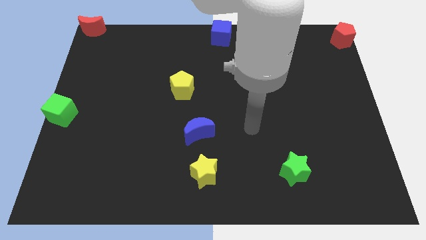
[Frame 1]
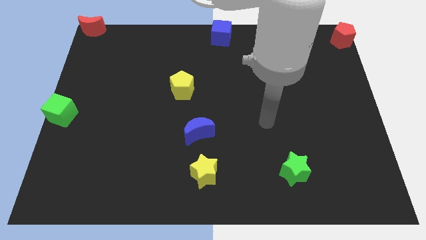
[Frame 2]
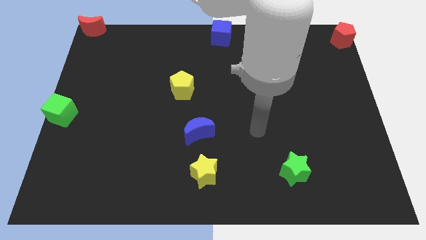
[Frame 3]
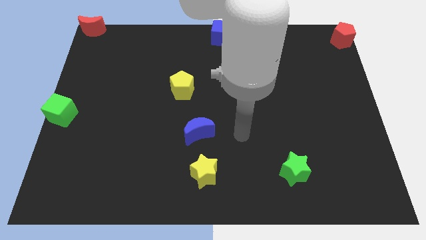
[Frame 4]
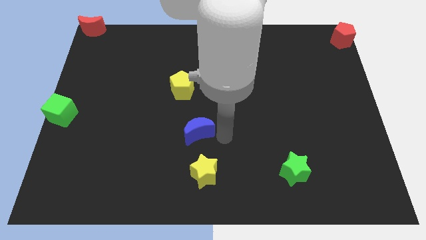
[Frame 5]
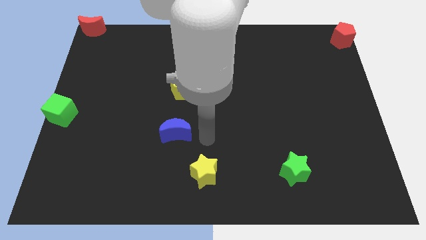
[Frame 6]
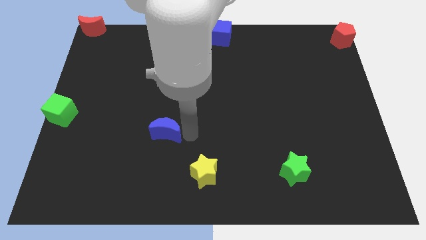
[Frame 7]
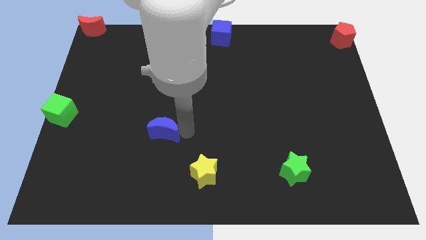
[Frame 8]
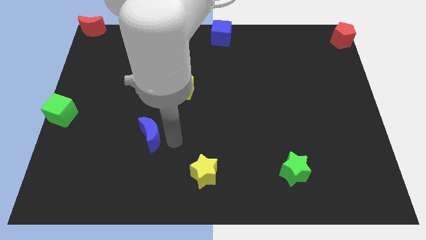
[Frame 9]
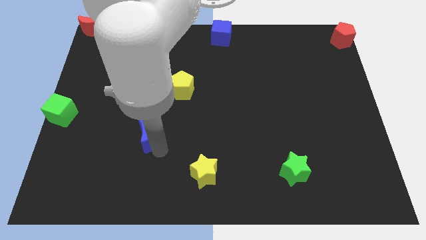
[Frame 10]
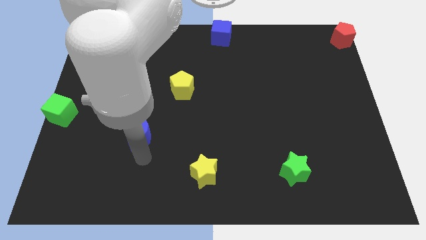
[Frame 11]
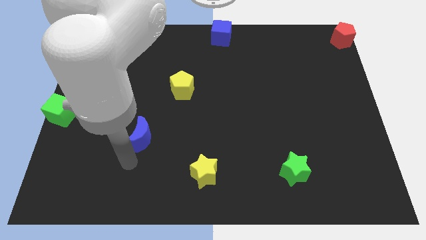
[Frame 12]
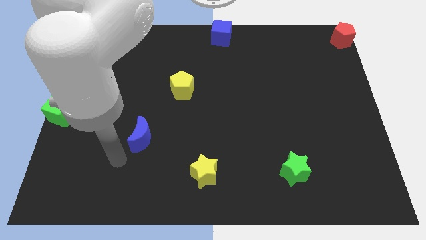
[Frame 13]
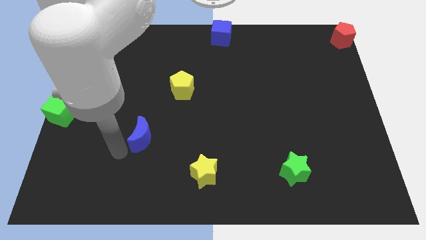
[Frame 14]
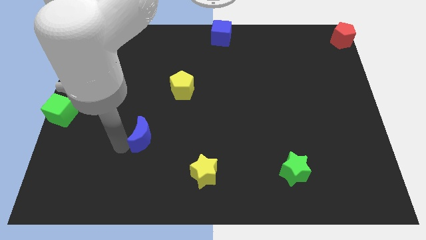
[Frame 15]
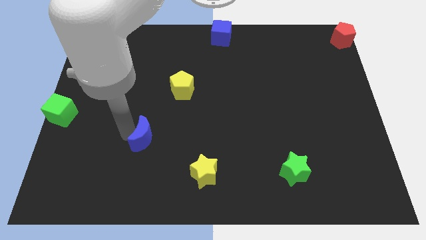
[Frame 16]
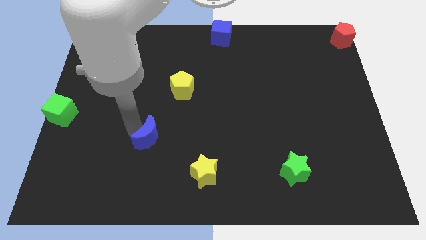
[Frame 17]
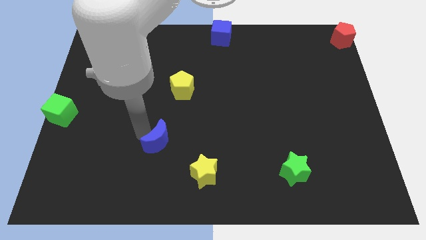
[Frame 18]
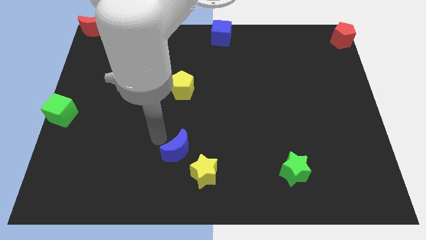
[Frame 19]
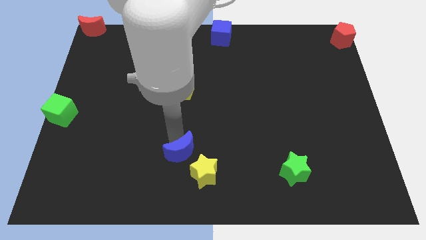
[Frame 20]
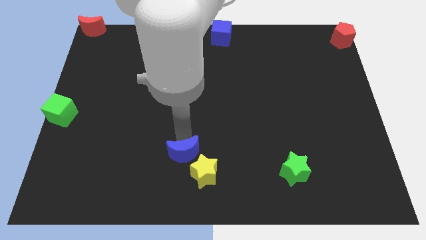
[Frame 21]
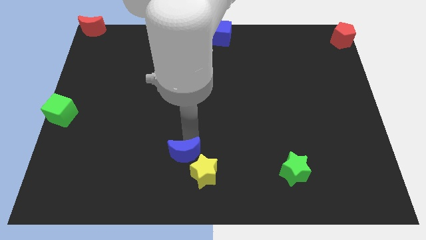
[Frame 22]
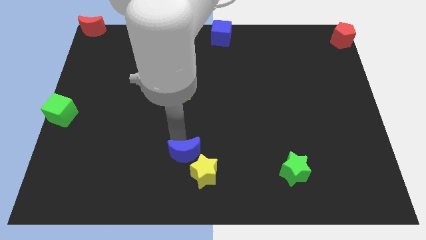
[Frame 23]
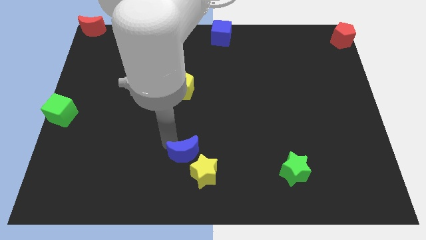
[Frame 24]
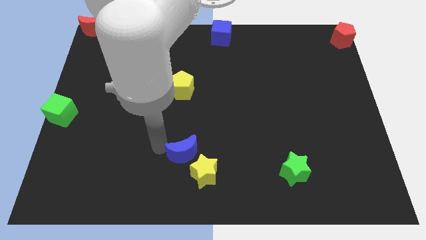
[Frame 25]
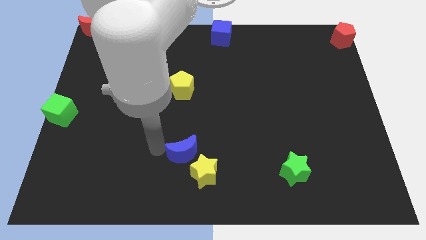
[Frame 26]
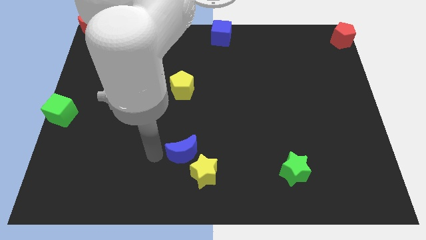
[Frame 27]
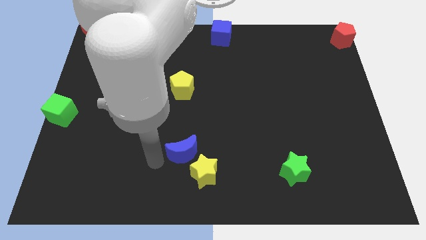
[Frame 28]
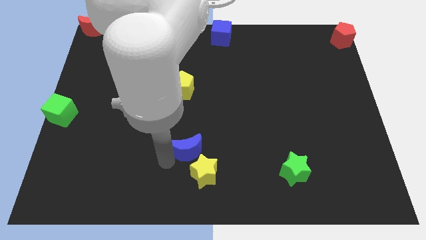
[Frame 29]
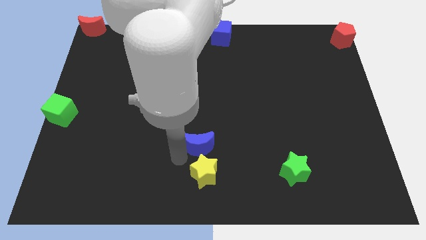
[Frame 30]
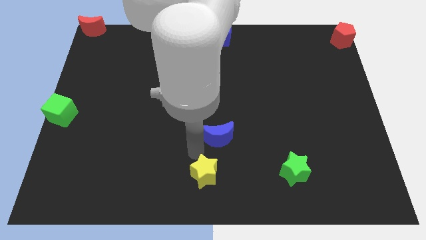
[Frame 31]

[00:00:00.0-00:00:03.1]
move the blue moon to the top side of the yellow star

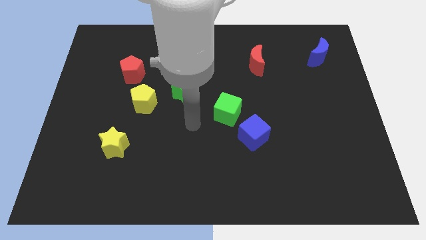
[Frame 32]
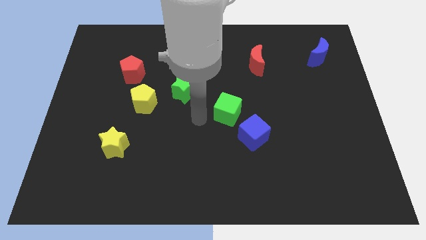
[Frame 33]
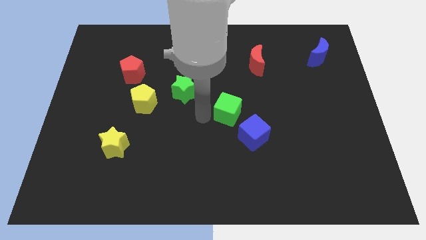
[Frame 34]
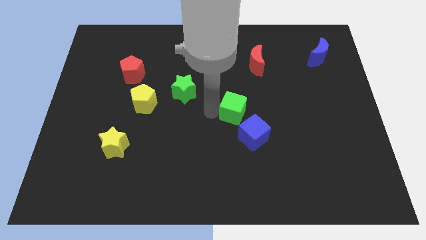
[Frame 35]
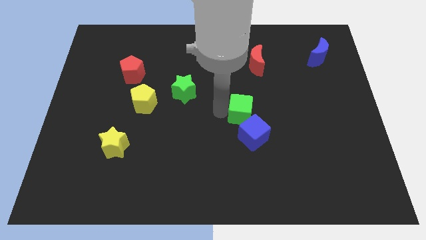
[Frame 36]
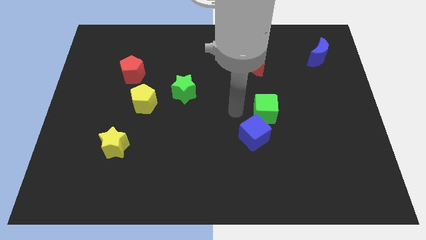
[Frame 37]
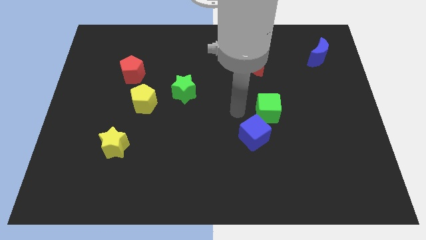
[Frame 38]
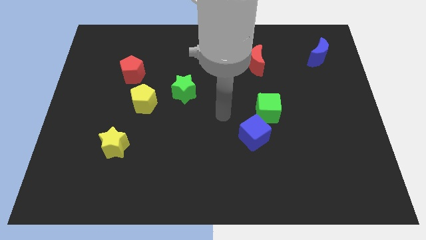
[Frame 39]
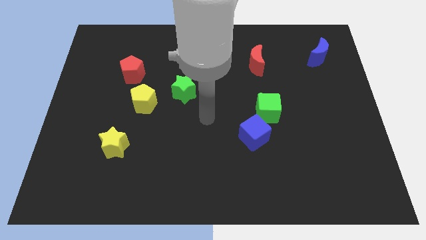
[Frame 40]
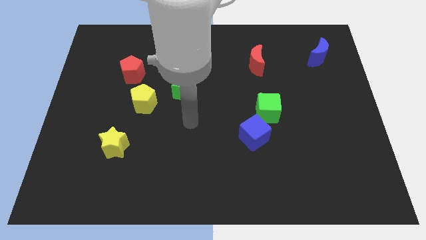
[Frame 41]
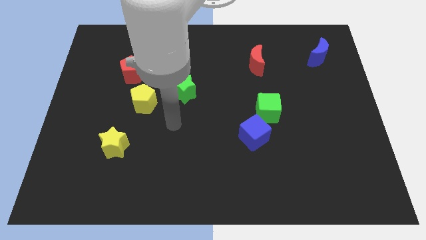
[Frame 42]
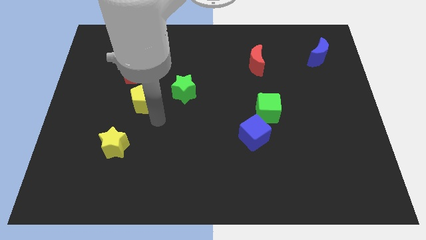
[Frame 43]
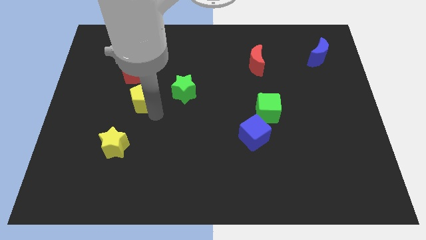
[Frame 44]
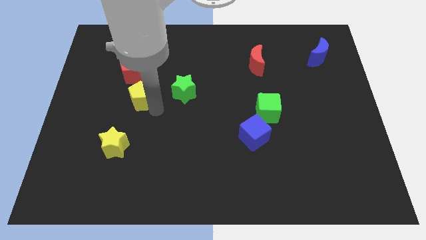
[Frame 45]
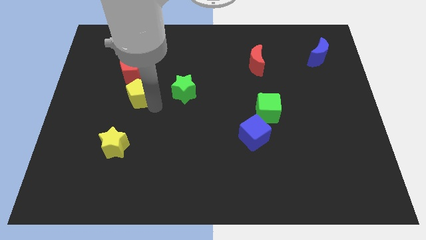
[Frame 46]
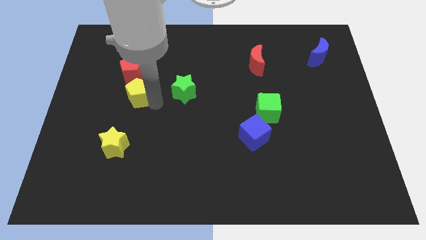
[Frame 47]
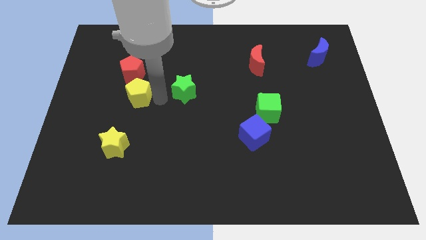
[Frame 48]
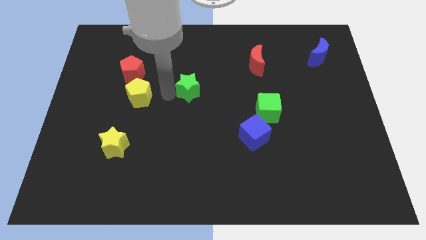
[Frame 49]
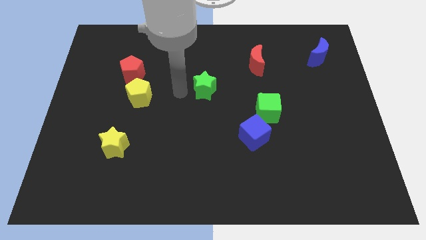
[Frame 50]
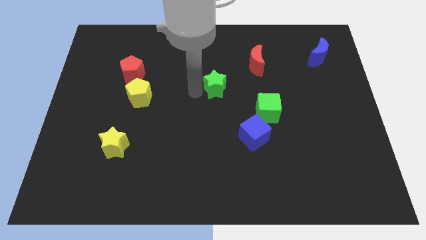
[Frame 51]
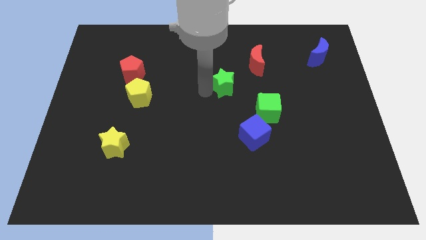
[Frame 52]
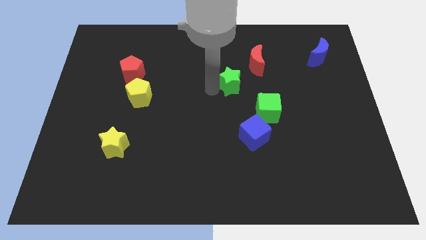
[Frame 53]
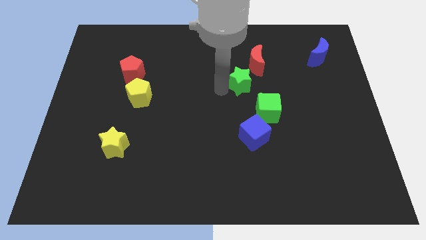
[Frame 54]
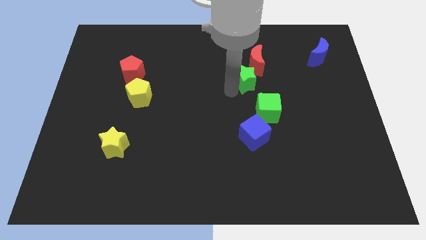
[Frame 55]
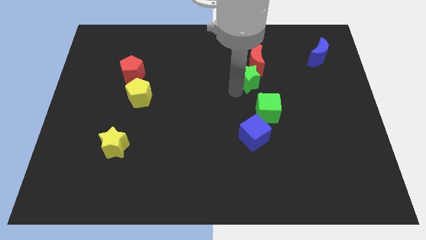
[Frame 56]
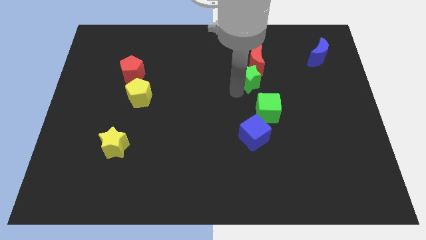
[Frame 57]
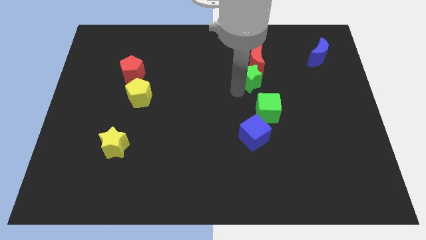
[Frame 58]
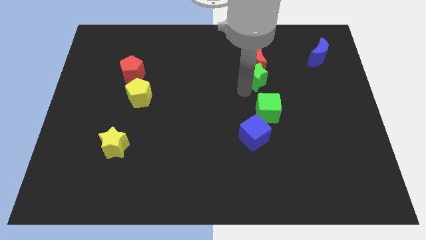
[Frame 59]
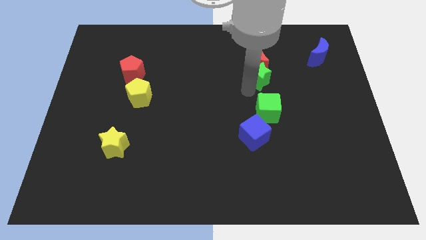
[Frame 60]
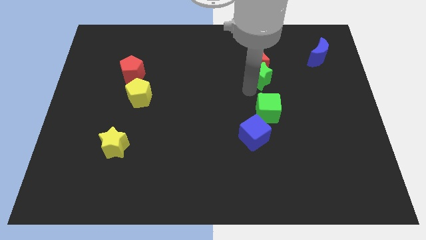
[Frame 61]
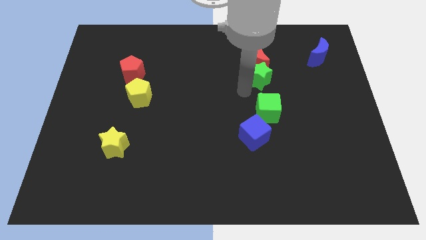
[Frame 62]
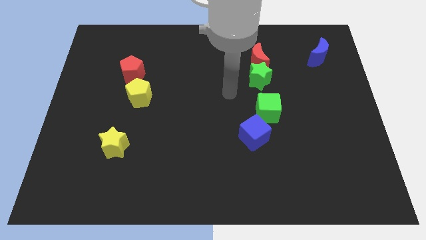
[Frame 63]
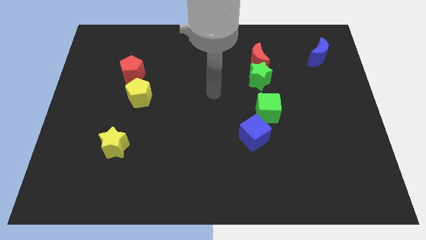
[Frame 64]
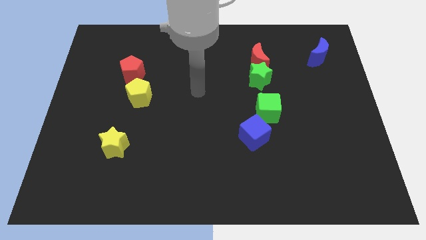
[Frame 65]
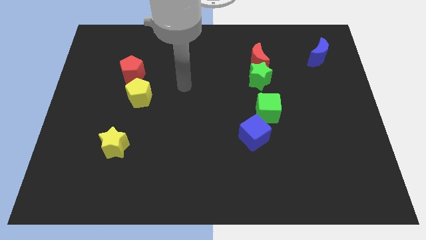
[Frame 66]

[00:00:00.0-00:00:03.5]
move the green cube and green star to the bottom side of the red moon

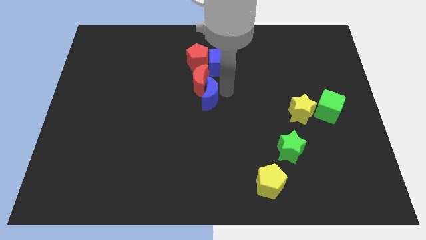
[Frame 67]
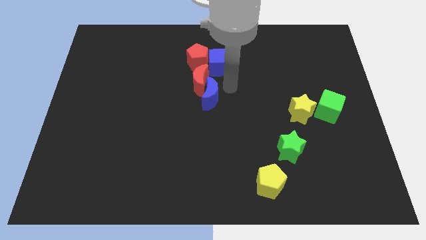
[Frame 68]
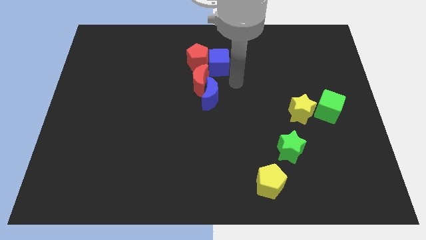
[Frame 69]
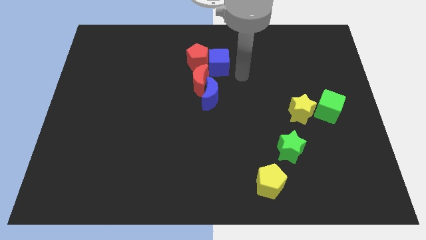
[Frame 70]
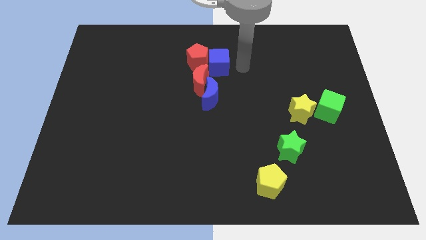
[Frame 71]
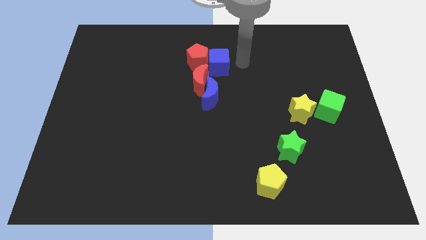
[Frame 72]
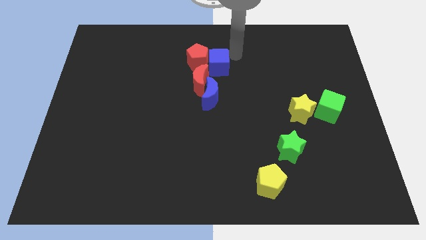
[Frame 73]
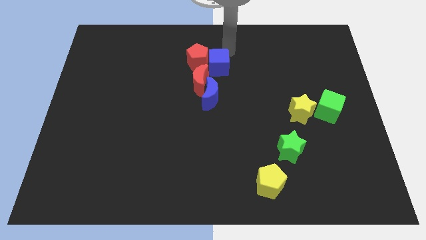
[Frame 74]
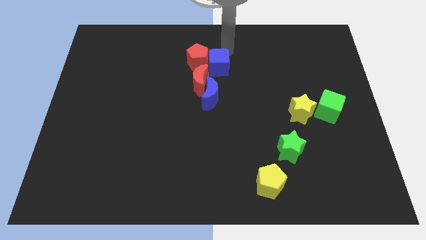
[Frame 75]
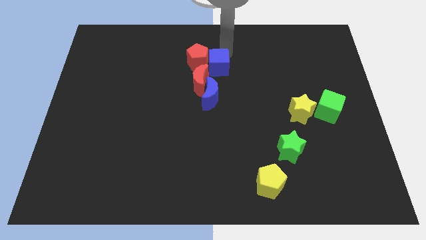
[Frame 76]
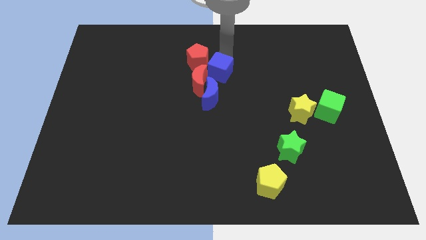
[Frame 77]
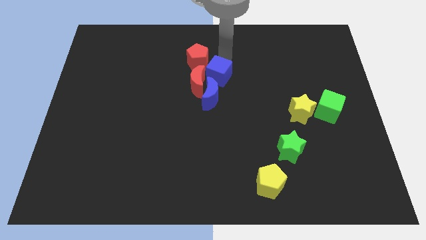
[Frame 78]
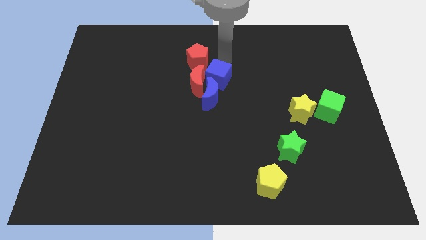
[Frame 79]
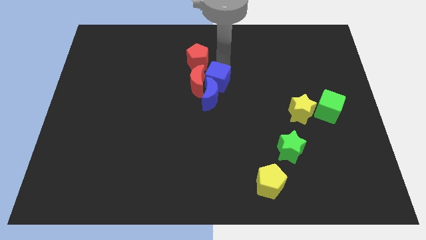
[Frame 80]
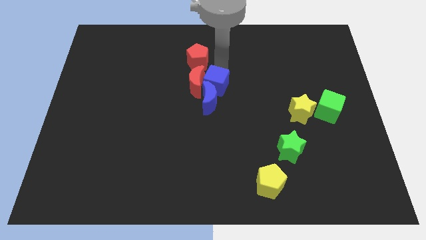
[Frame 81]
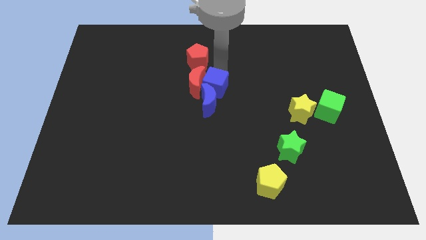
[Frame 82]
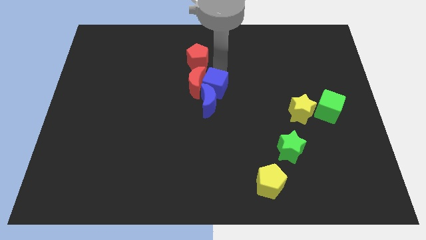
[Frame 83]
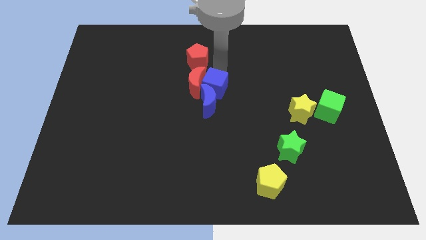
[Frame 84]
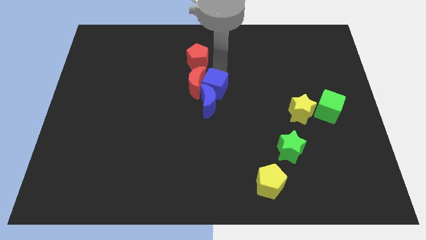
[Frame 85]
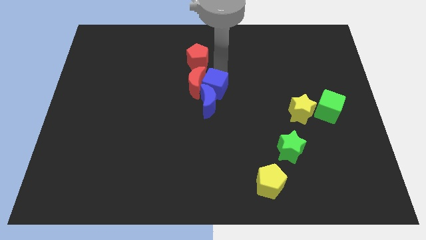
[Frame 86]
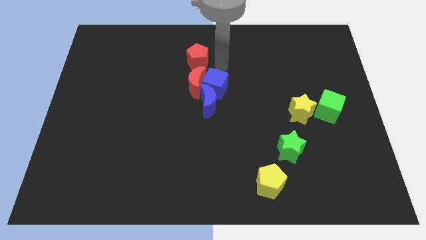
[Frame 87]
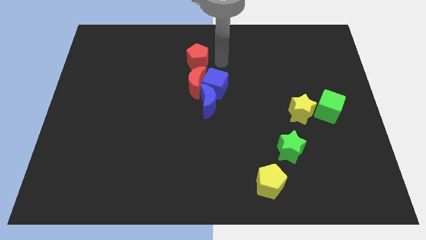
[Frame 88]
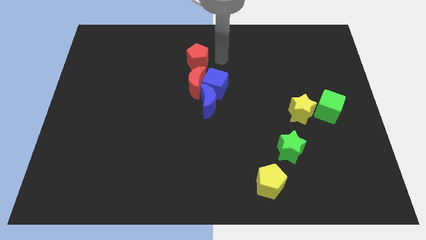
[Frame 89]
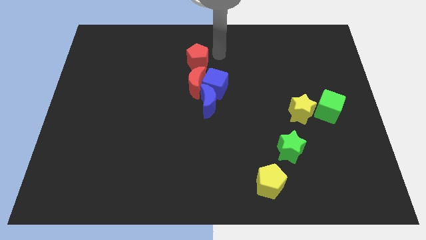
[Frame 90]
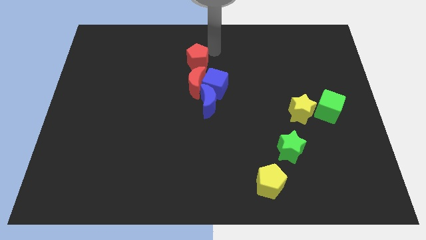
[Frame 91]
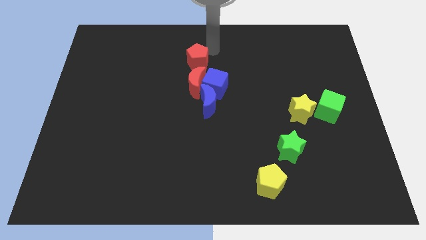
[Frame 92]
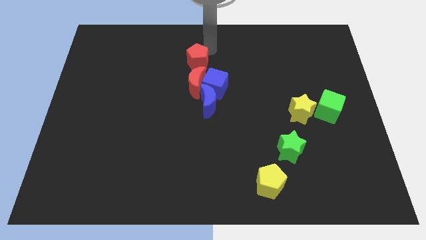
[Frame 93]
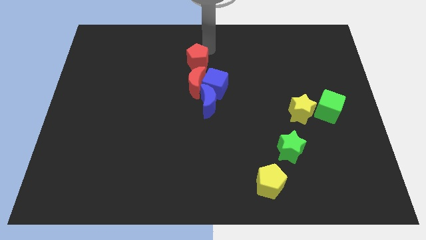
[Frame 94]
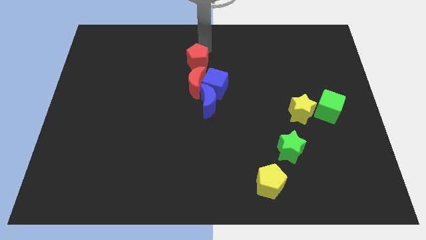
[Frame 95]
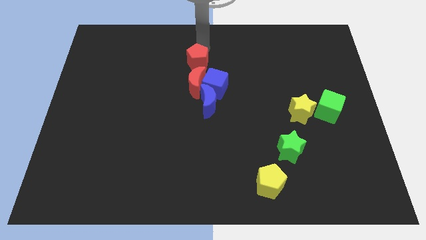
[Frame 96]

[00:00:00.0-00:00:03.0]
push the blue cube into the blue moon
